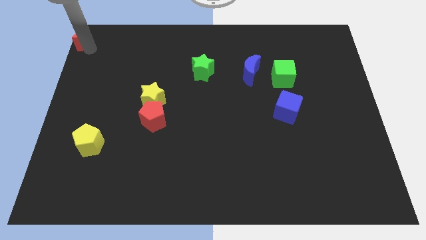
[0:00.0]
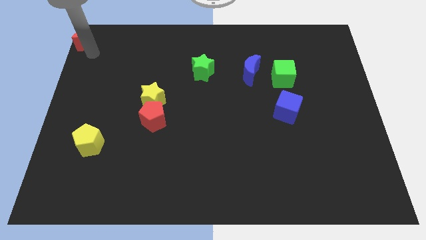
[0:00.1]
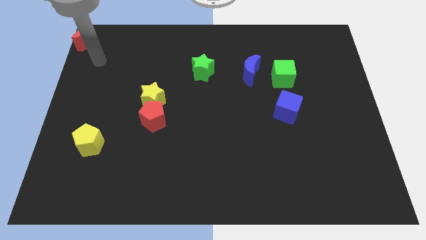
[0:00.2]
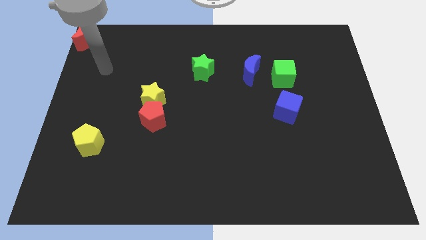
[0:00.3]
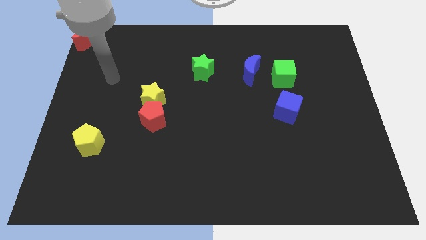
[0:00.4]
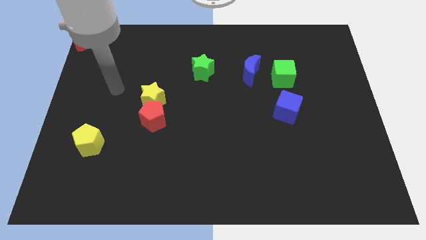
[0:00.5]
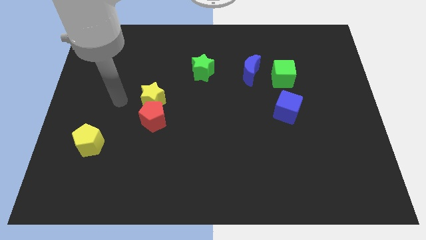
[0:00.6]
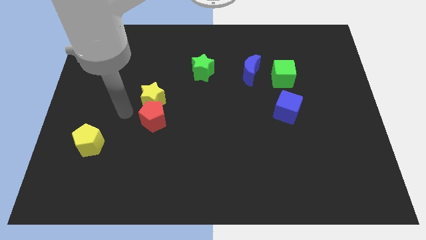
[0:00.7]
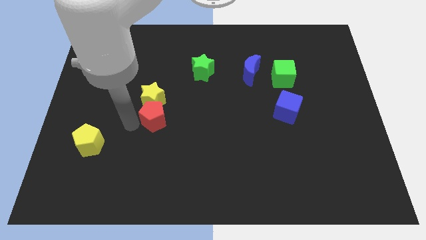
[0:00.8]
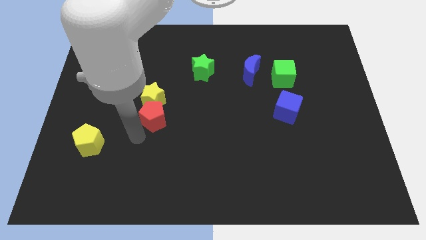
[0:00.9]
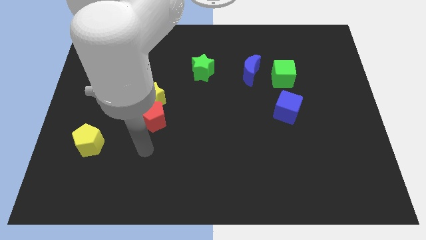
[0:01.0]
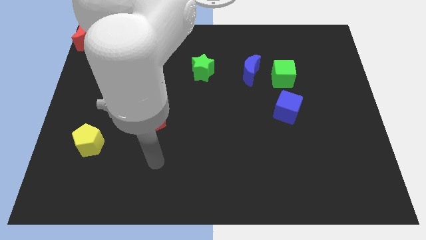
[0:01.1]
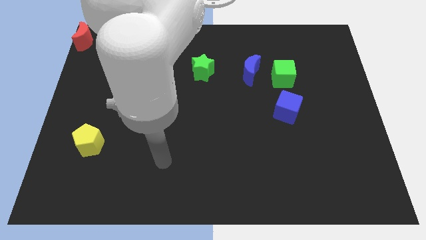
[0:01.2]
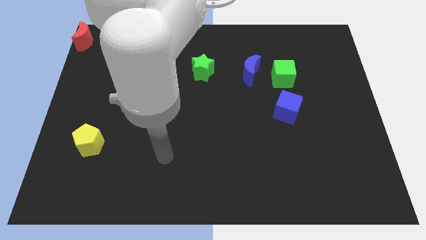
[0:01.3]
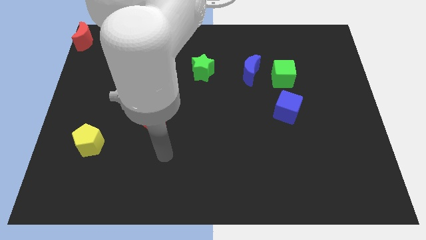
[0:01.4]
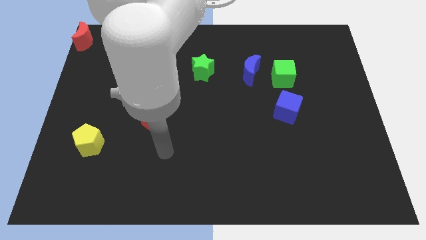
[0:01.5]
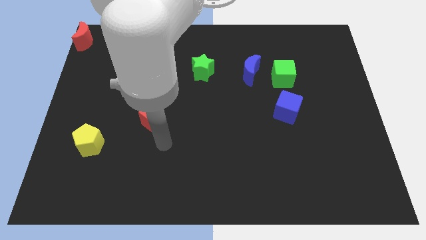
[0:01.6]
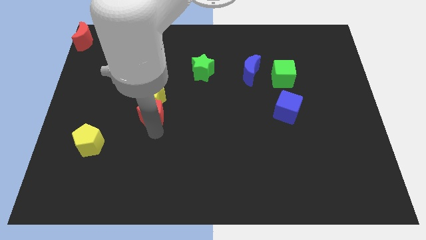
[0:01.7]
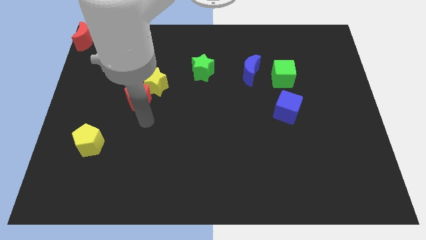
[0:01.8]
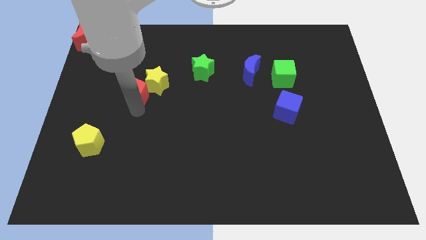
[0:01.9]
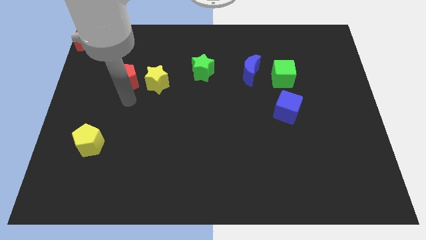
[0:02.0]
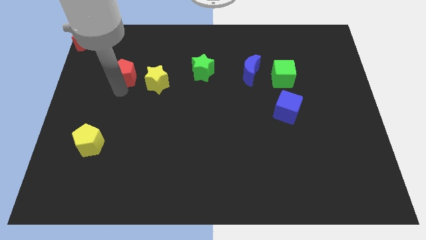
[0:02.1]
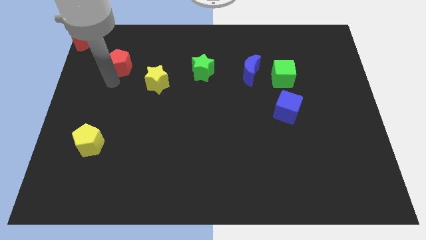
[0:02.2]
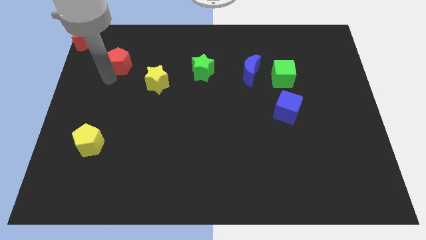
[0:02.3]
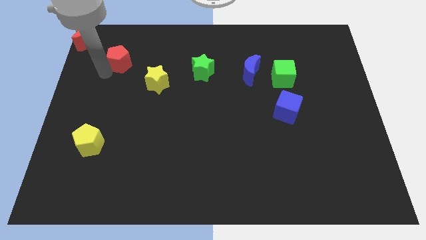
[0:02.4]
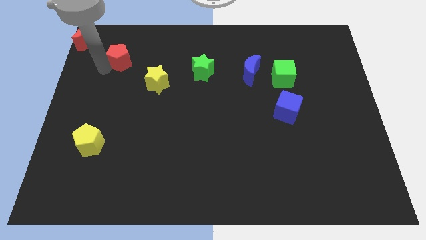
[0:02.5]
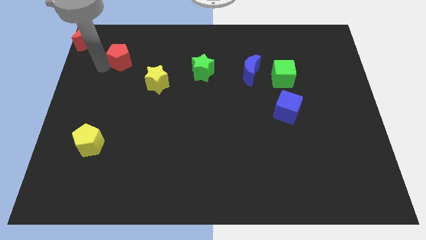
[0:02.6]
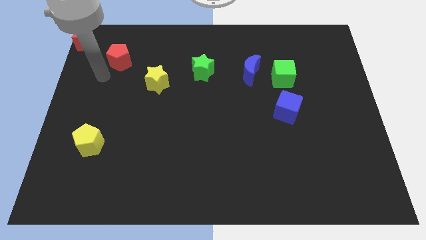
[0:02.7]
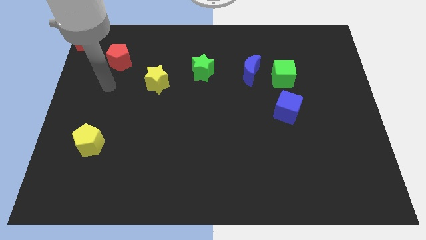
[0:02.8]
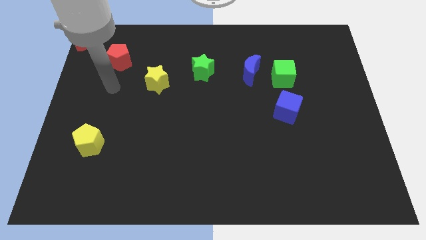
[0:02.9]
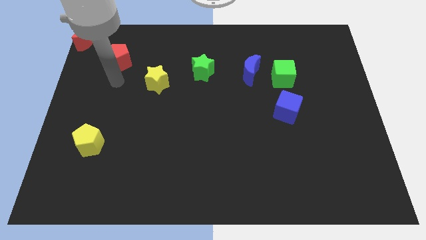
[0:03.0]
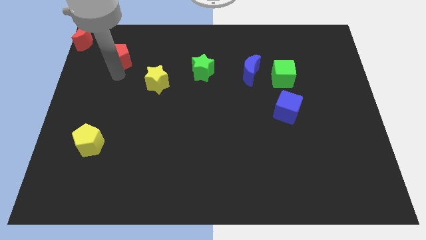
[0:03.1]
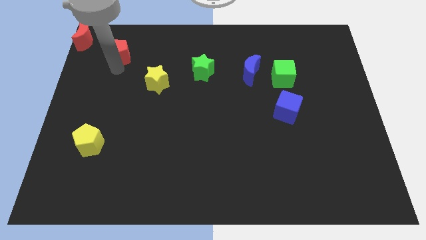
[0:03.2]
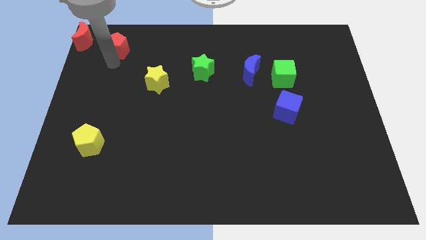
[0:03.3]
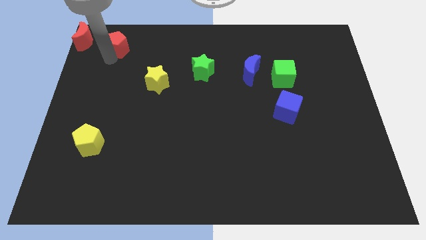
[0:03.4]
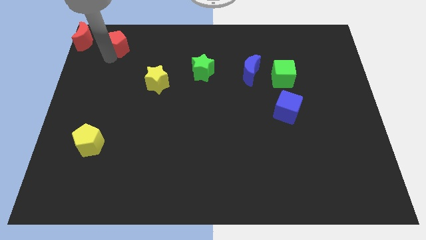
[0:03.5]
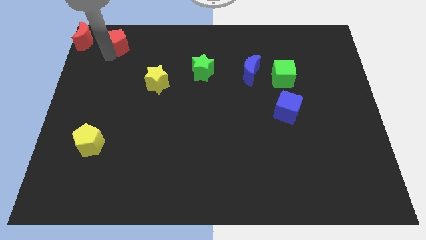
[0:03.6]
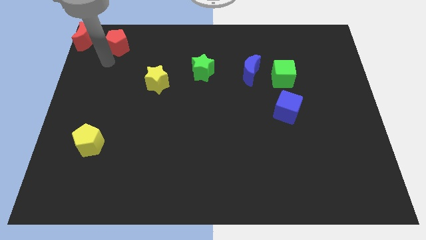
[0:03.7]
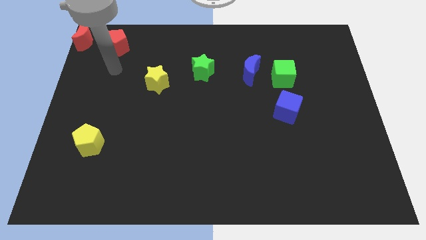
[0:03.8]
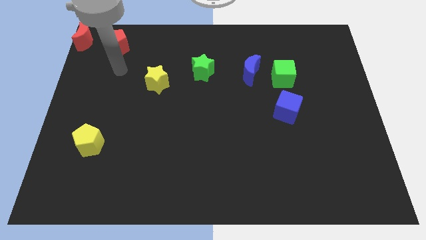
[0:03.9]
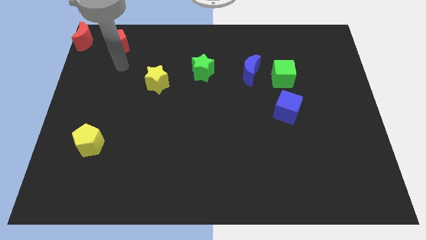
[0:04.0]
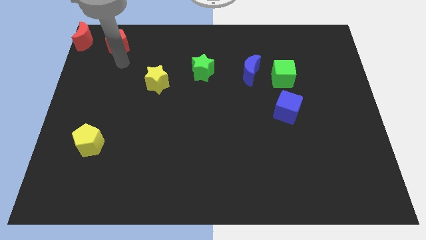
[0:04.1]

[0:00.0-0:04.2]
move the red pentagon to the right of the red crescent

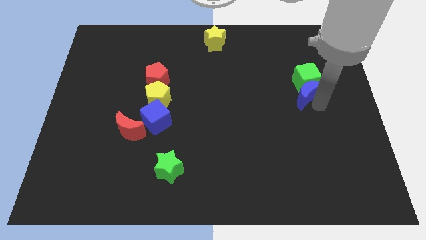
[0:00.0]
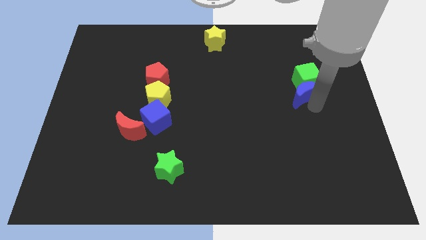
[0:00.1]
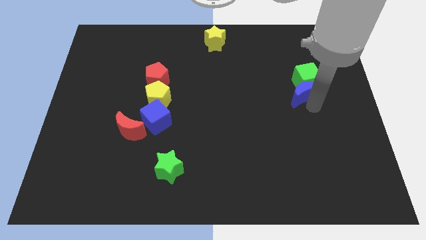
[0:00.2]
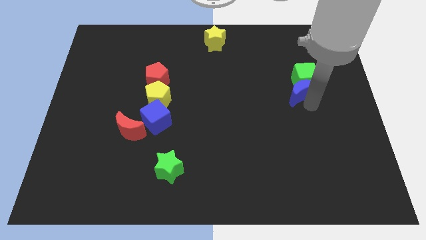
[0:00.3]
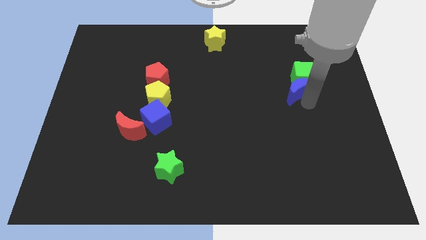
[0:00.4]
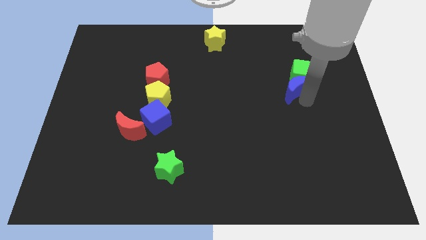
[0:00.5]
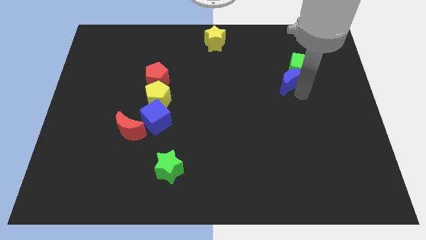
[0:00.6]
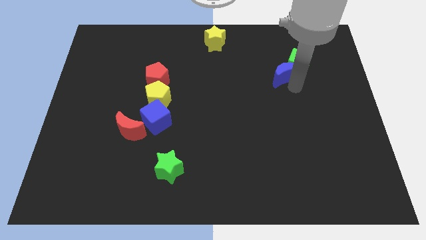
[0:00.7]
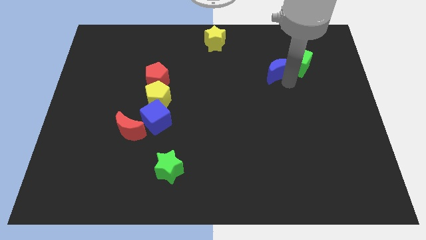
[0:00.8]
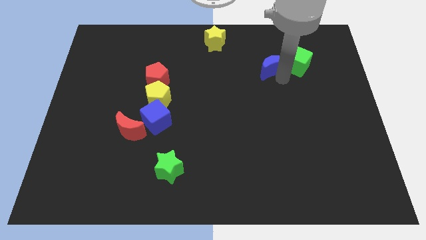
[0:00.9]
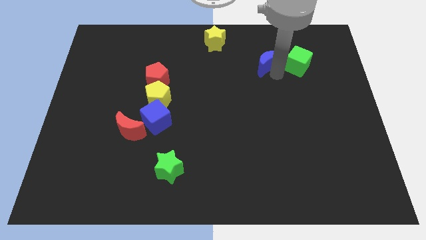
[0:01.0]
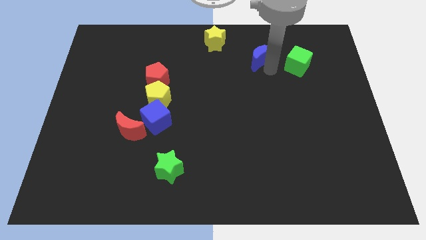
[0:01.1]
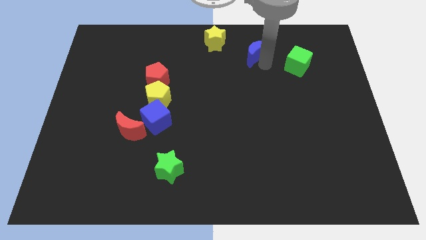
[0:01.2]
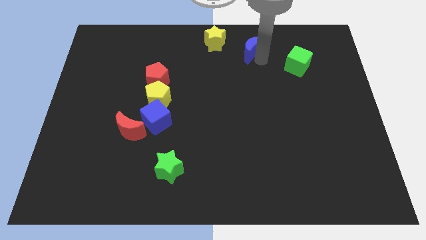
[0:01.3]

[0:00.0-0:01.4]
place the blue moon diagonally in between the yellow star and the green cube

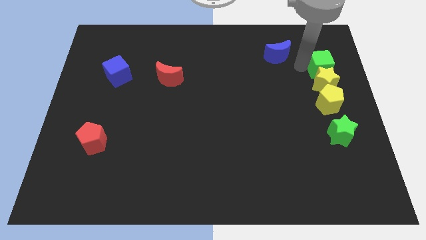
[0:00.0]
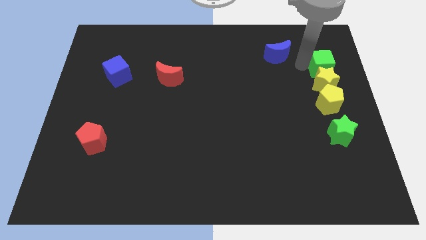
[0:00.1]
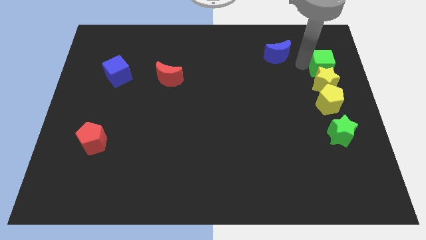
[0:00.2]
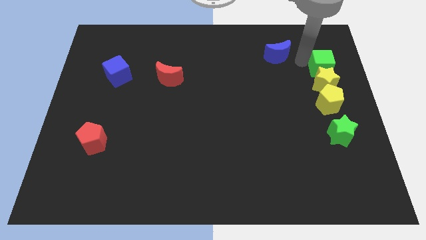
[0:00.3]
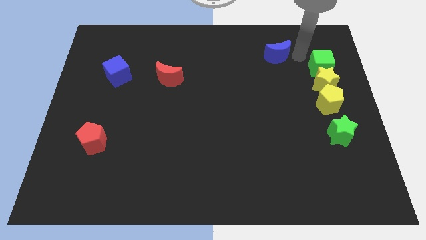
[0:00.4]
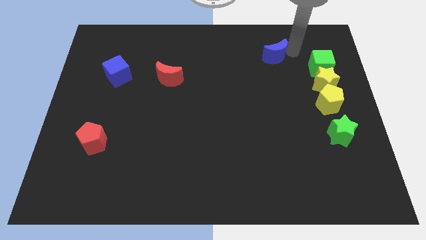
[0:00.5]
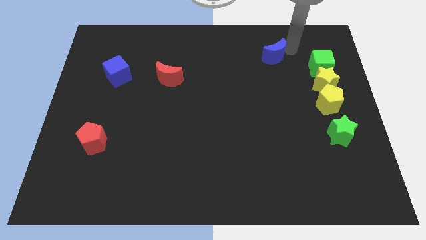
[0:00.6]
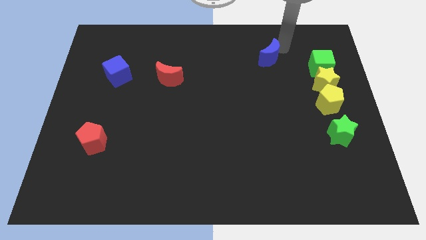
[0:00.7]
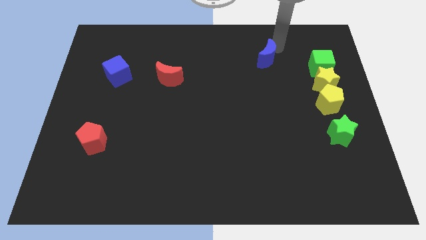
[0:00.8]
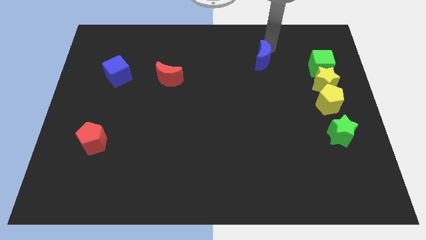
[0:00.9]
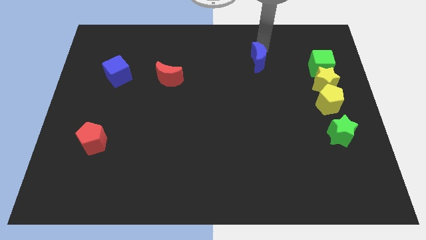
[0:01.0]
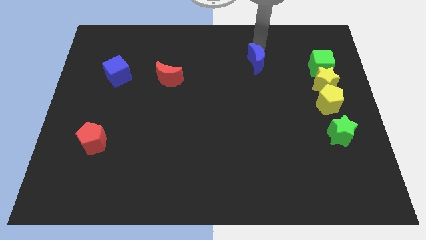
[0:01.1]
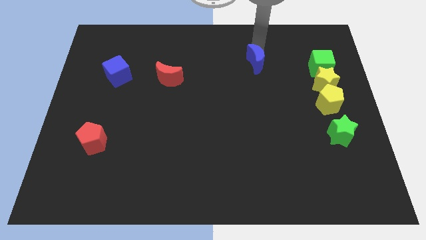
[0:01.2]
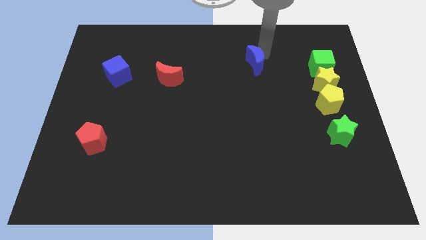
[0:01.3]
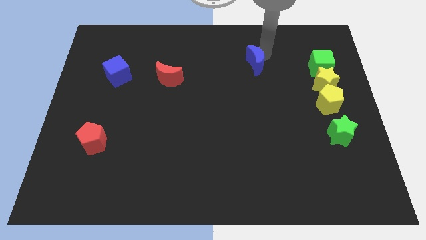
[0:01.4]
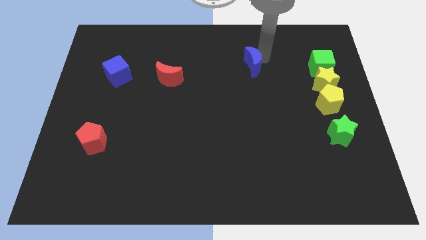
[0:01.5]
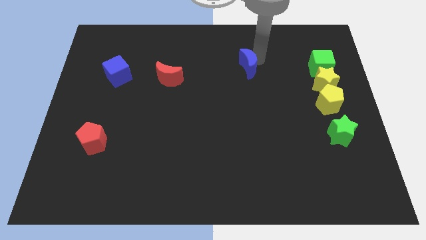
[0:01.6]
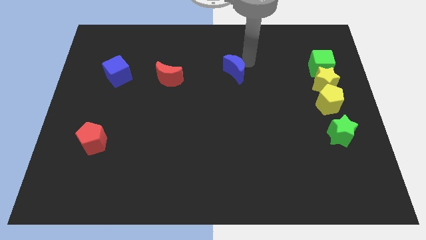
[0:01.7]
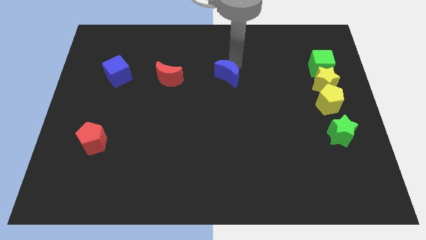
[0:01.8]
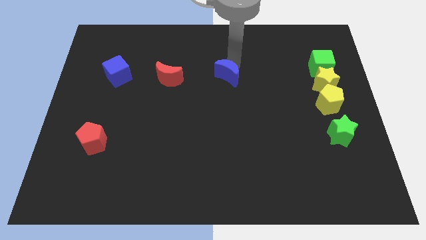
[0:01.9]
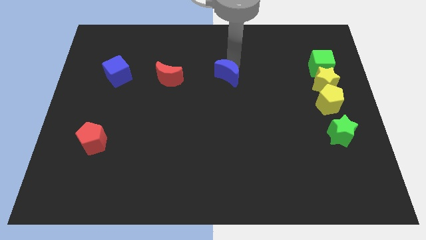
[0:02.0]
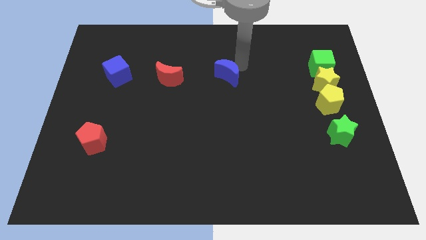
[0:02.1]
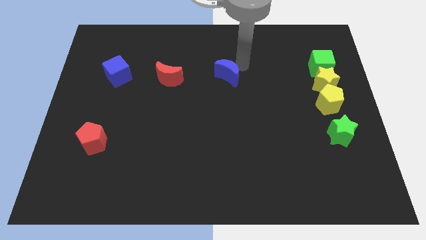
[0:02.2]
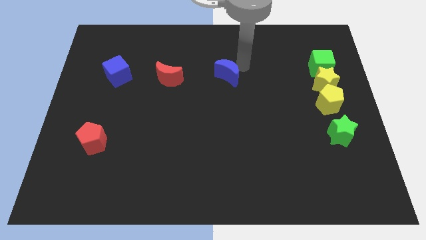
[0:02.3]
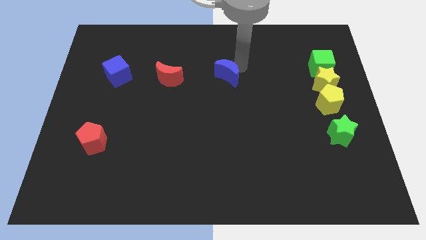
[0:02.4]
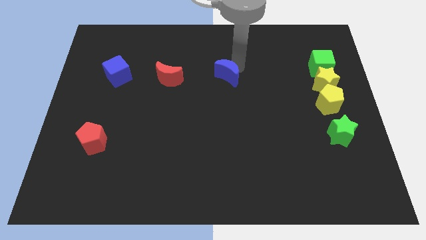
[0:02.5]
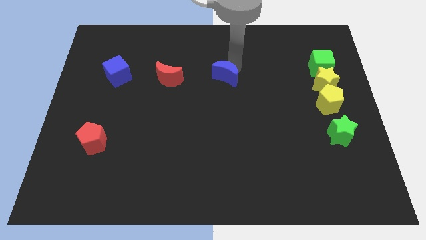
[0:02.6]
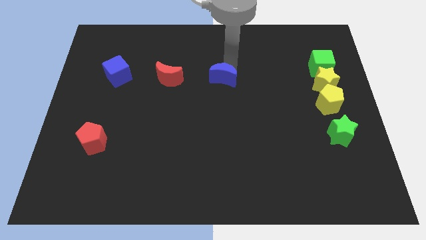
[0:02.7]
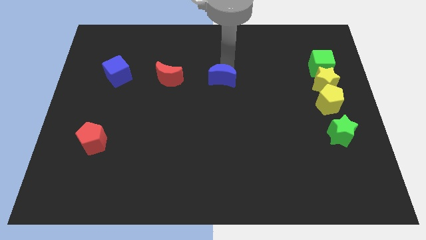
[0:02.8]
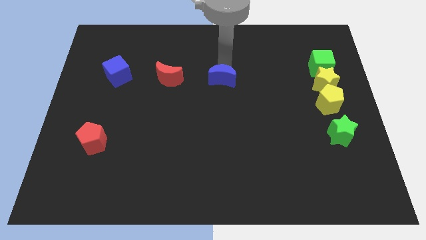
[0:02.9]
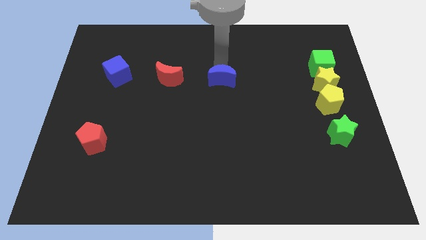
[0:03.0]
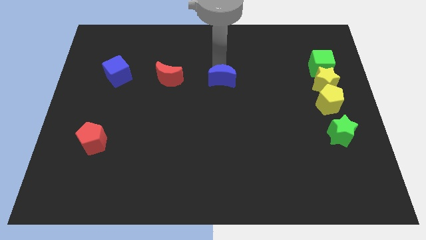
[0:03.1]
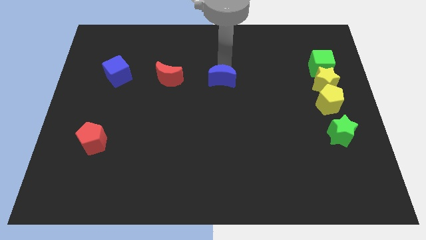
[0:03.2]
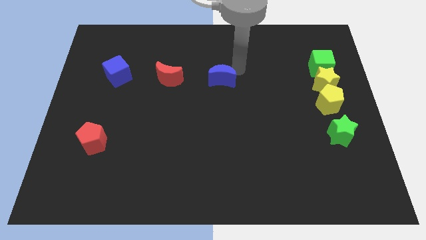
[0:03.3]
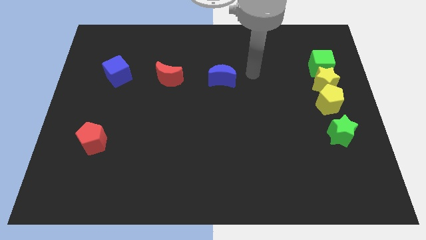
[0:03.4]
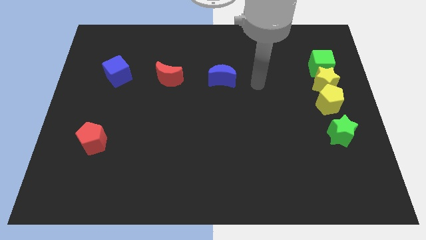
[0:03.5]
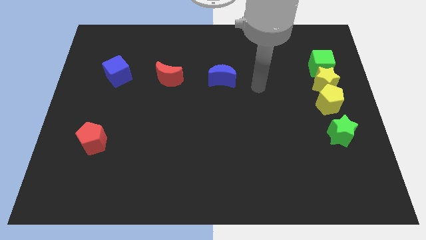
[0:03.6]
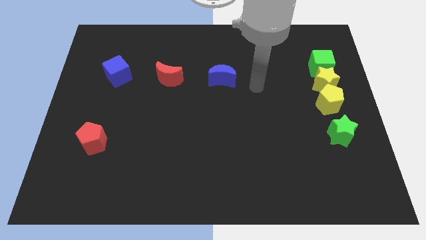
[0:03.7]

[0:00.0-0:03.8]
turn blue crescent around
